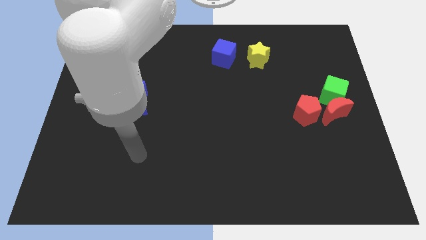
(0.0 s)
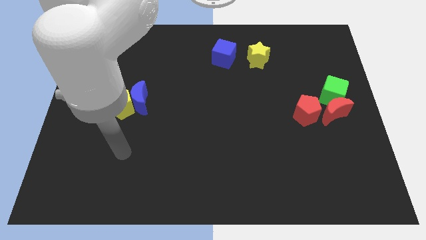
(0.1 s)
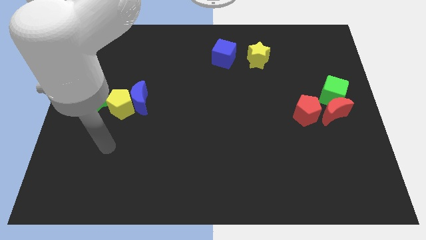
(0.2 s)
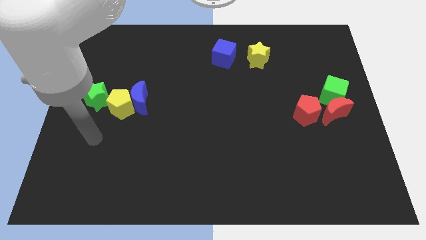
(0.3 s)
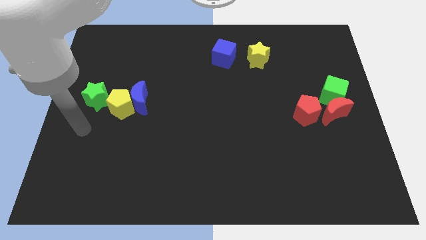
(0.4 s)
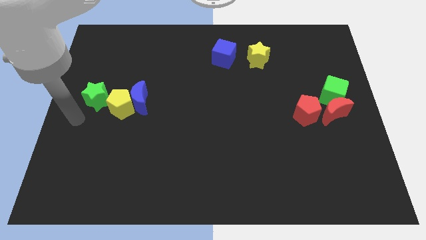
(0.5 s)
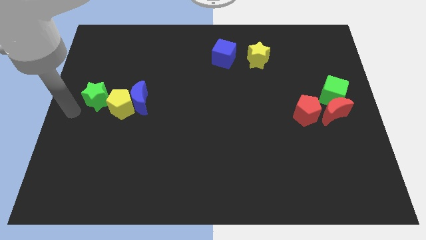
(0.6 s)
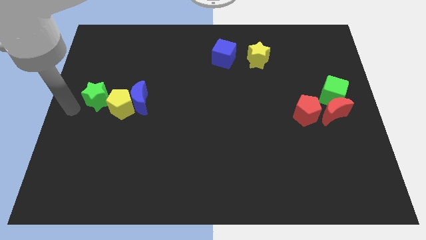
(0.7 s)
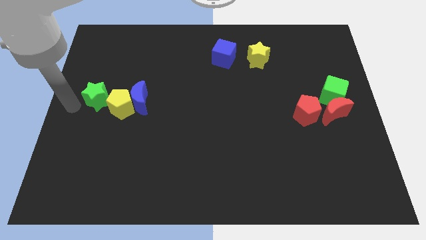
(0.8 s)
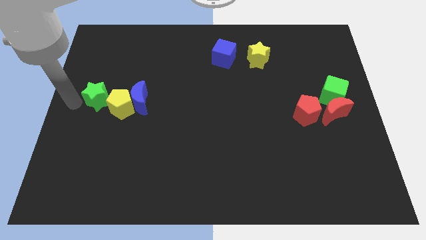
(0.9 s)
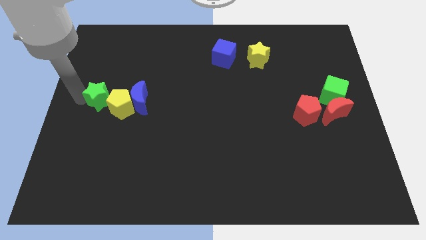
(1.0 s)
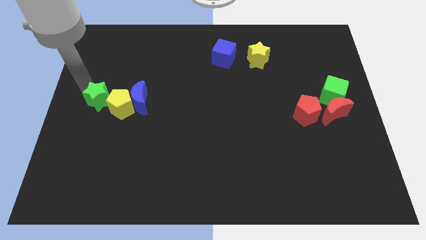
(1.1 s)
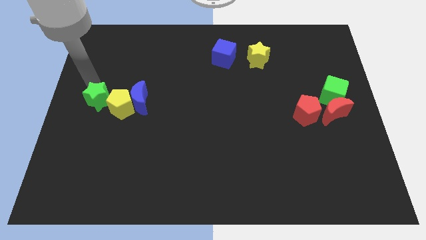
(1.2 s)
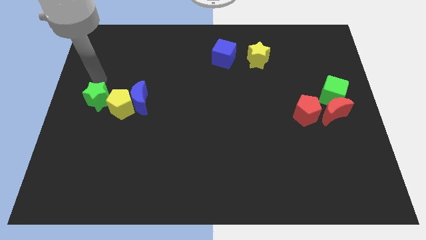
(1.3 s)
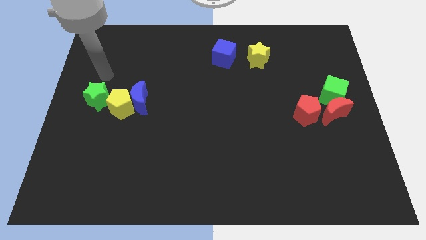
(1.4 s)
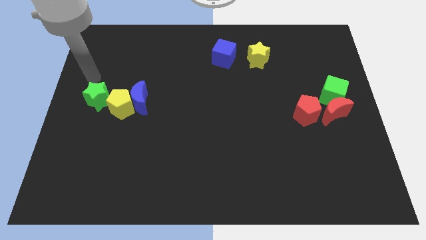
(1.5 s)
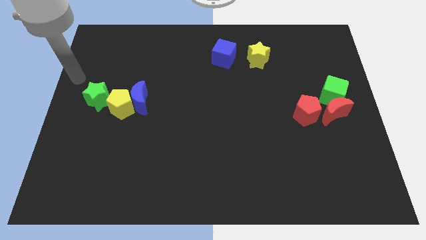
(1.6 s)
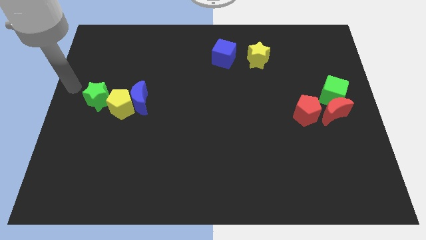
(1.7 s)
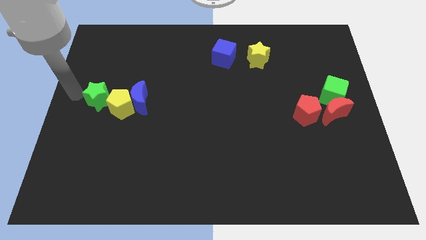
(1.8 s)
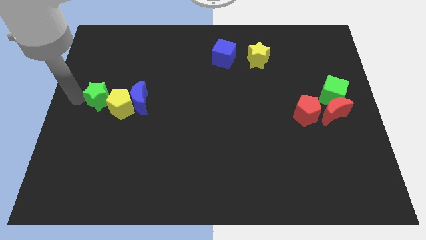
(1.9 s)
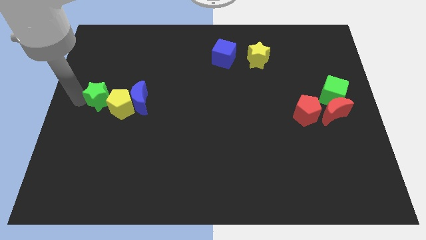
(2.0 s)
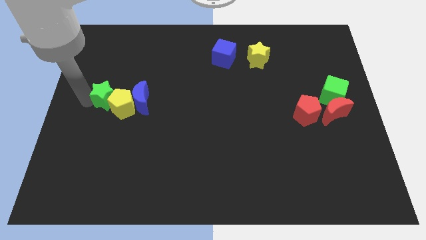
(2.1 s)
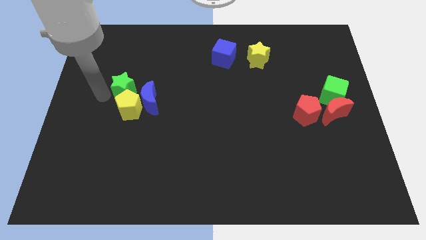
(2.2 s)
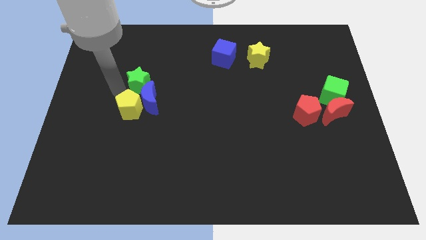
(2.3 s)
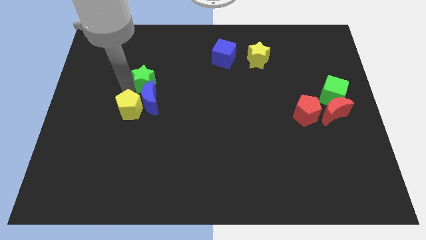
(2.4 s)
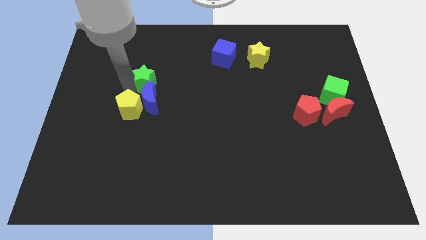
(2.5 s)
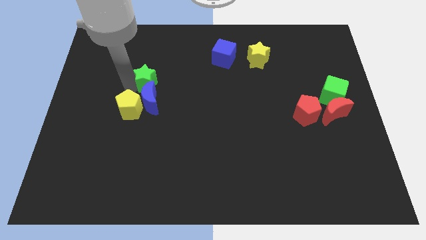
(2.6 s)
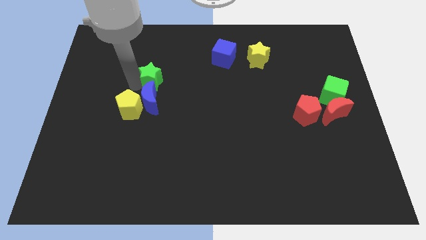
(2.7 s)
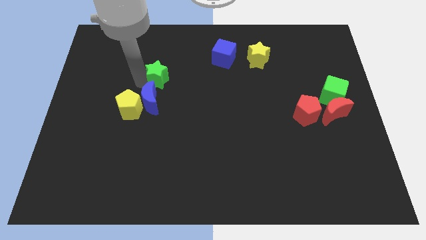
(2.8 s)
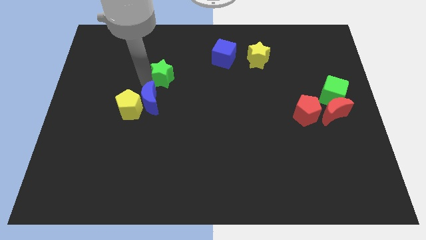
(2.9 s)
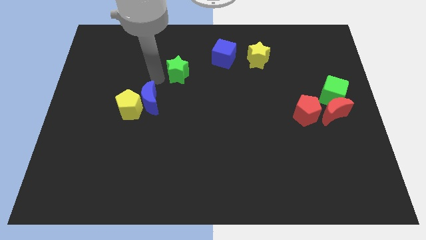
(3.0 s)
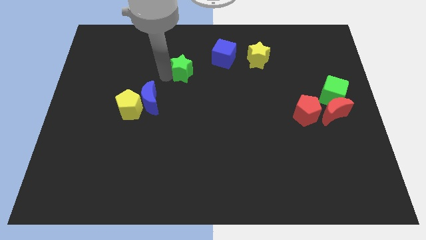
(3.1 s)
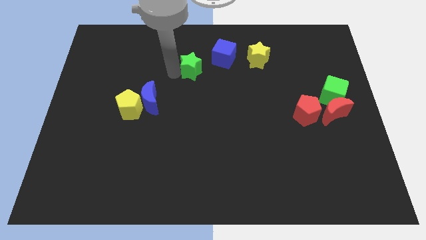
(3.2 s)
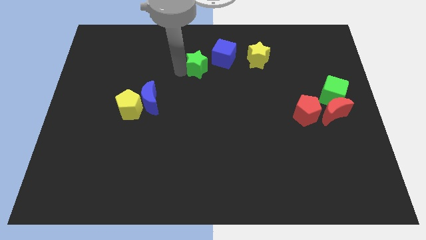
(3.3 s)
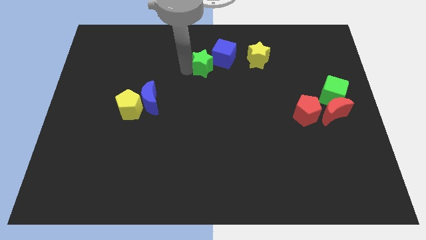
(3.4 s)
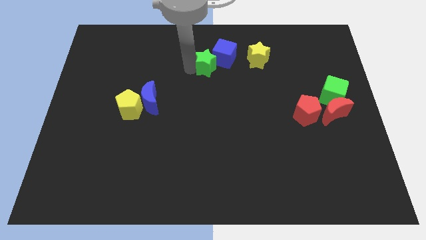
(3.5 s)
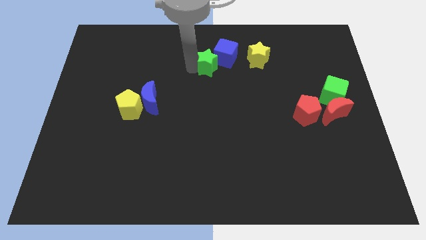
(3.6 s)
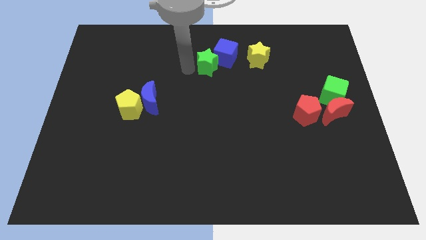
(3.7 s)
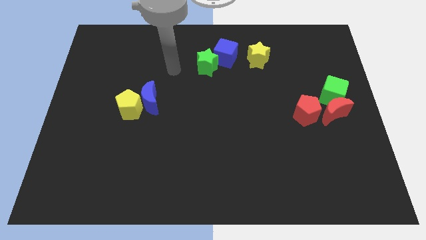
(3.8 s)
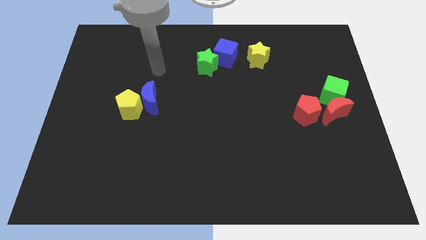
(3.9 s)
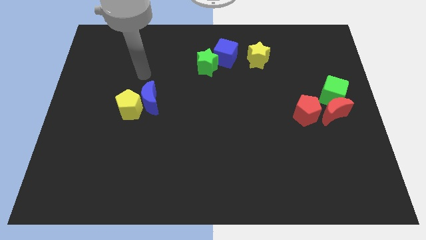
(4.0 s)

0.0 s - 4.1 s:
push green star into the blue cube

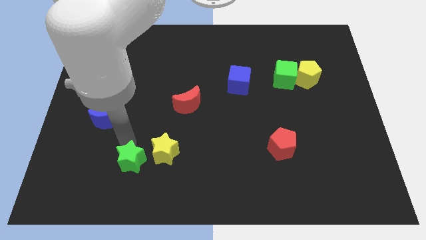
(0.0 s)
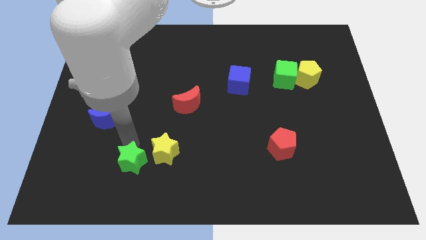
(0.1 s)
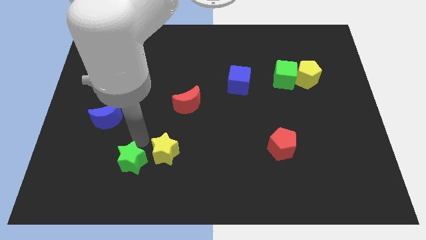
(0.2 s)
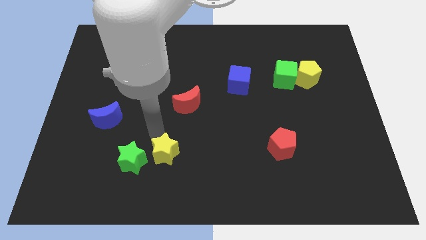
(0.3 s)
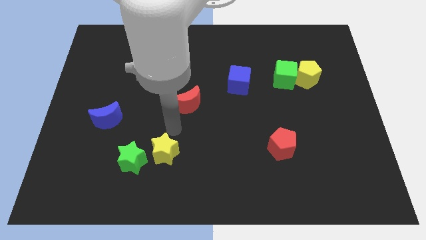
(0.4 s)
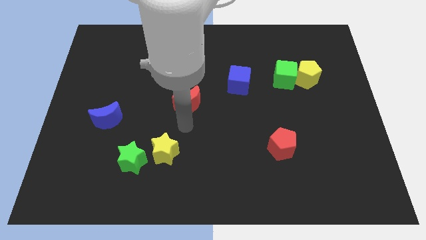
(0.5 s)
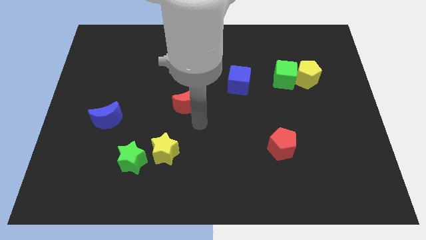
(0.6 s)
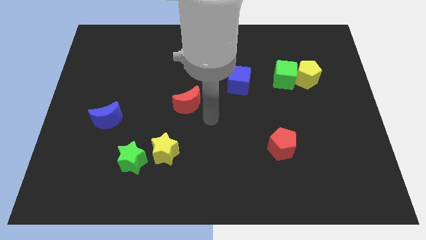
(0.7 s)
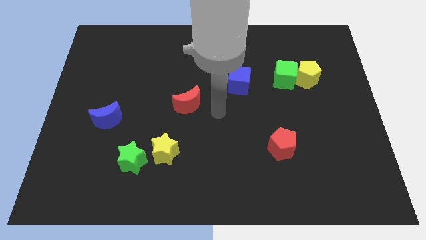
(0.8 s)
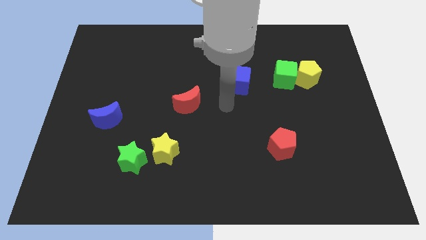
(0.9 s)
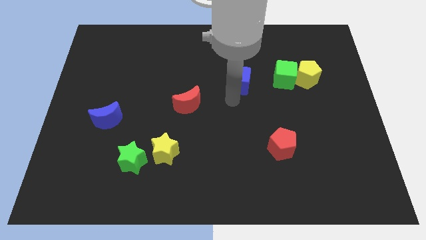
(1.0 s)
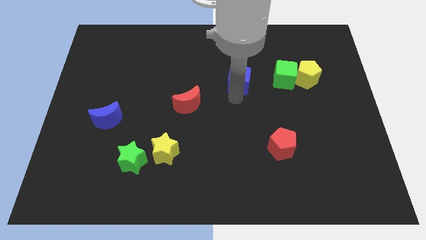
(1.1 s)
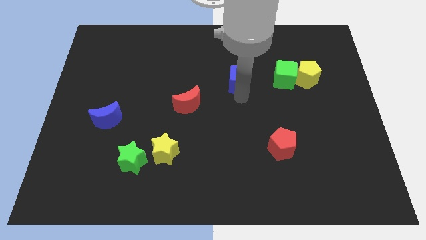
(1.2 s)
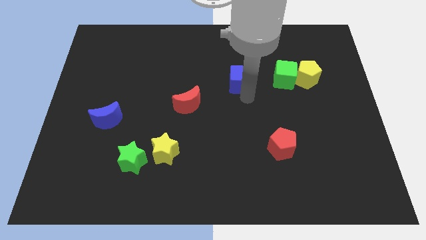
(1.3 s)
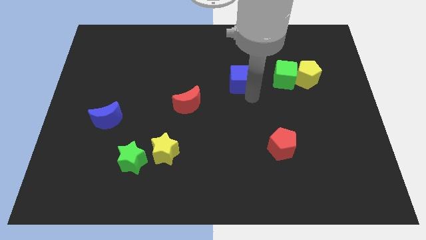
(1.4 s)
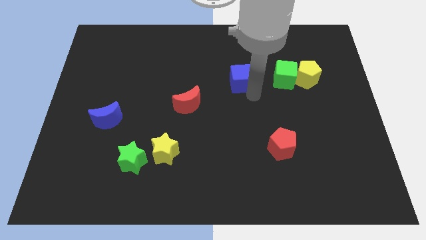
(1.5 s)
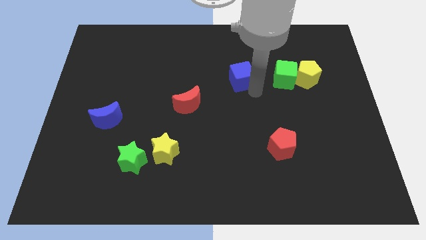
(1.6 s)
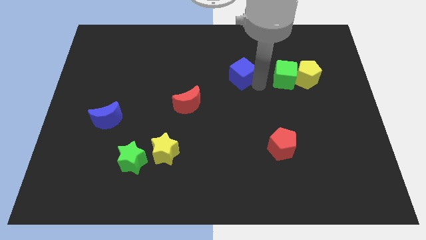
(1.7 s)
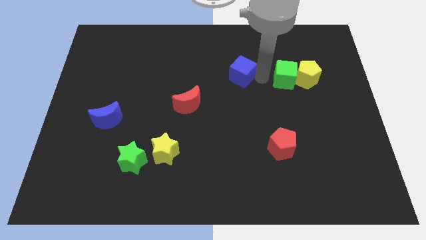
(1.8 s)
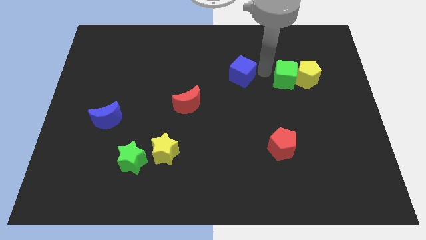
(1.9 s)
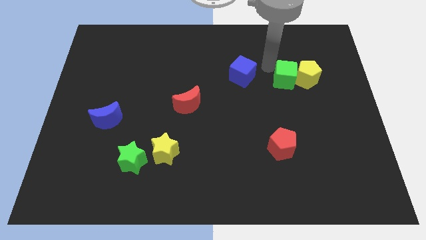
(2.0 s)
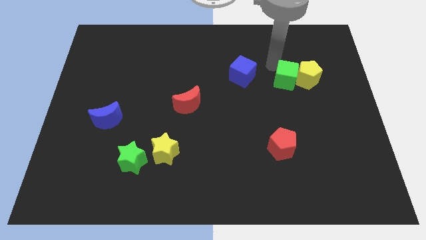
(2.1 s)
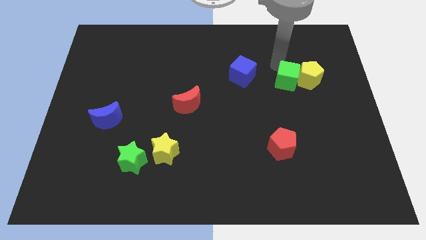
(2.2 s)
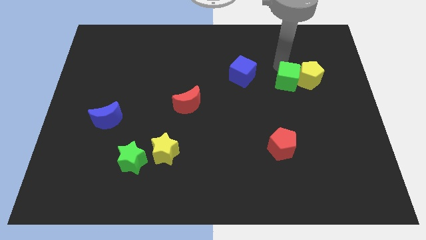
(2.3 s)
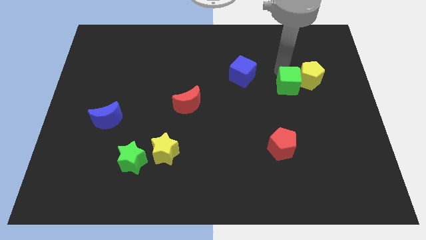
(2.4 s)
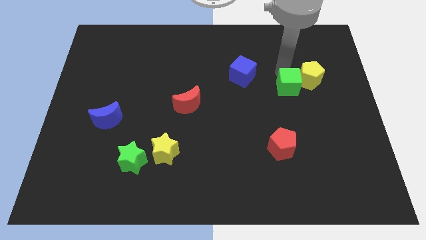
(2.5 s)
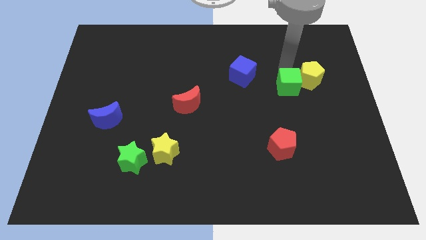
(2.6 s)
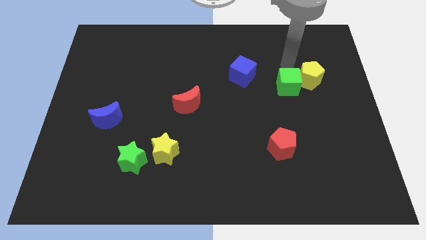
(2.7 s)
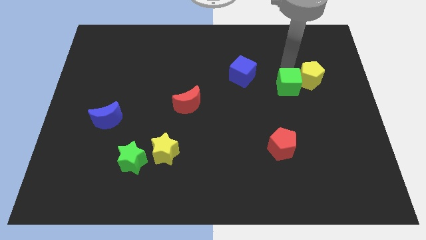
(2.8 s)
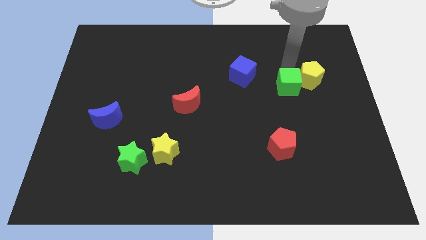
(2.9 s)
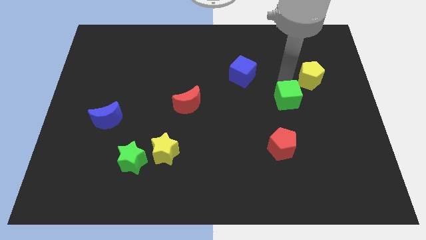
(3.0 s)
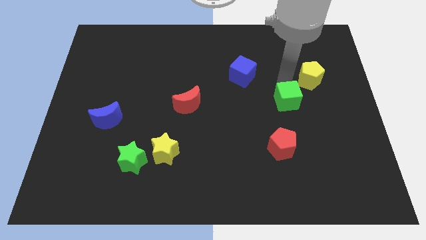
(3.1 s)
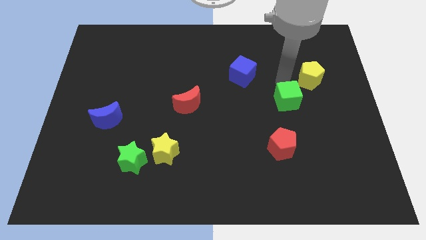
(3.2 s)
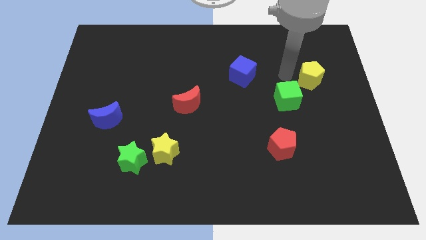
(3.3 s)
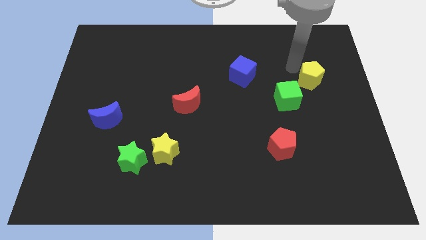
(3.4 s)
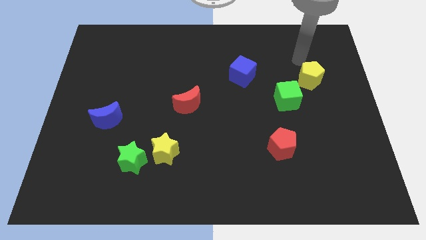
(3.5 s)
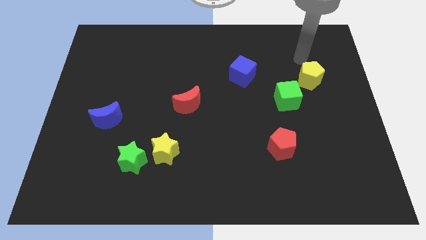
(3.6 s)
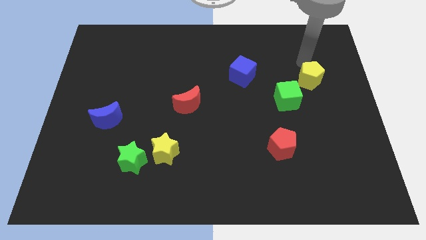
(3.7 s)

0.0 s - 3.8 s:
move the green cube parallel to the top of the red pentagon

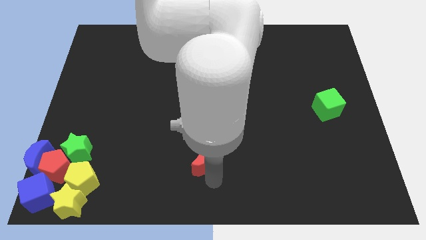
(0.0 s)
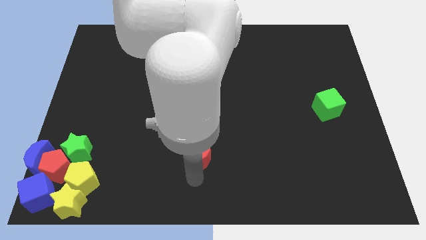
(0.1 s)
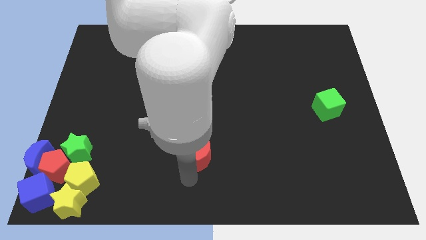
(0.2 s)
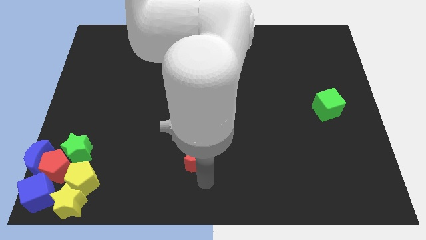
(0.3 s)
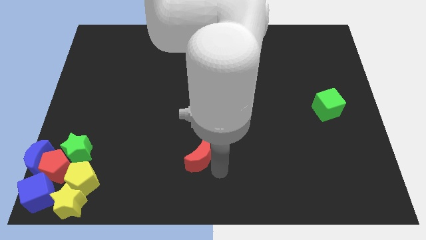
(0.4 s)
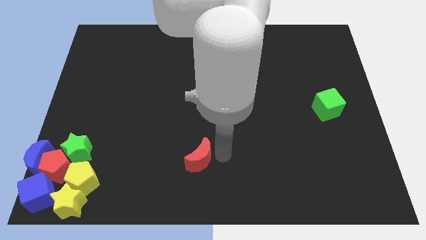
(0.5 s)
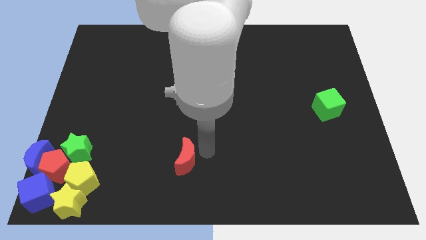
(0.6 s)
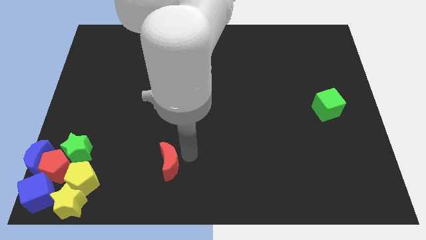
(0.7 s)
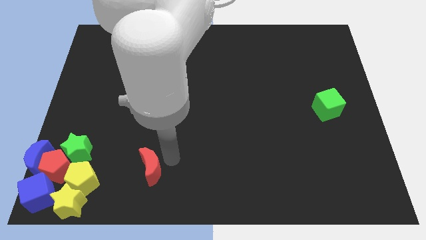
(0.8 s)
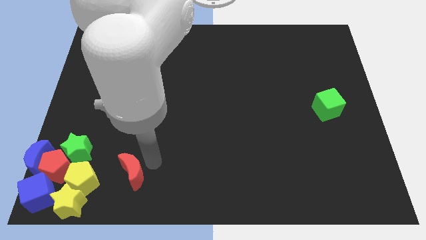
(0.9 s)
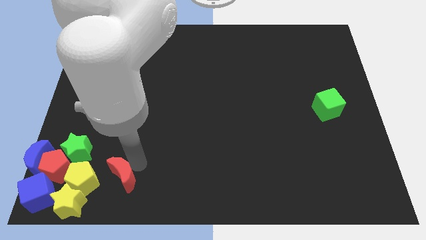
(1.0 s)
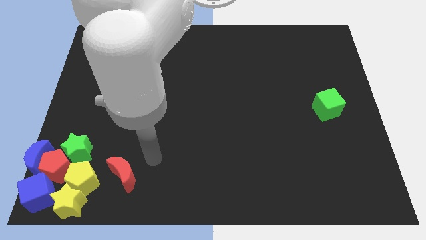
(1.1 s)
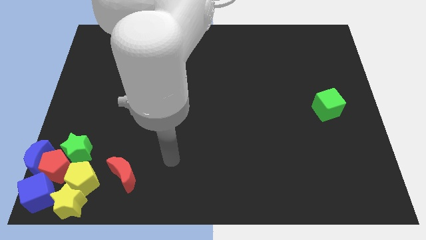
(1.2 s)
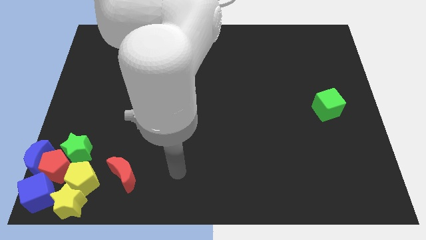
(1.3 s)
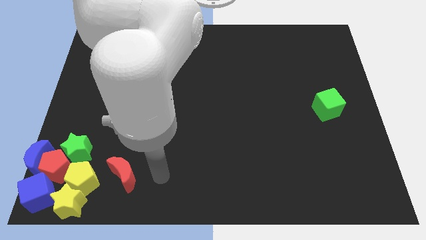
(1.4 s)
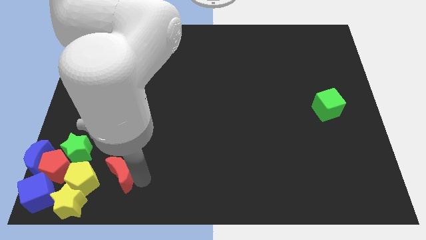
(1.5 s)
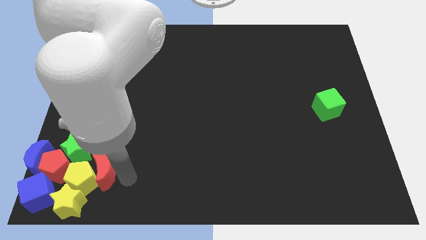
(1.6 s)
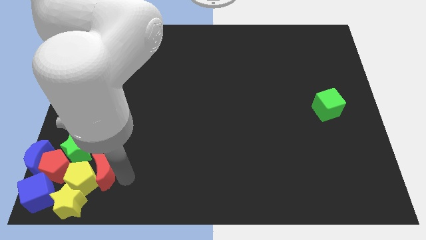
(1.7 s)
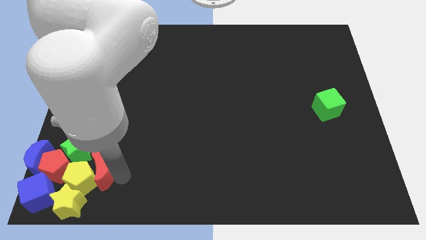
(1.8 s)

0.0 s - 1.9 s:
move the red crescent into the yellow pentagon
